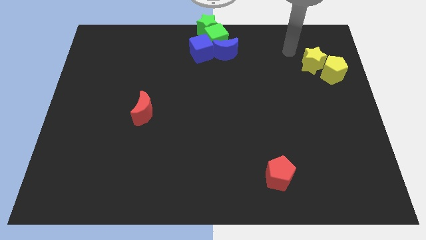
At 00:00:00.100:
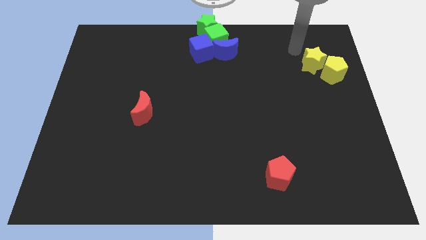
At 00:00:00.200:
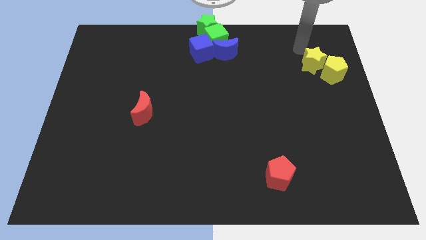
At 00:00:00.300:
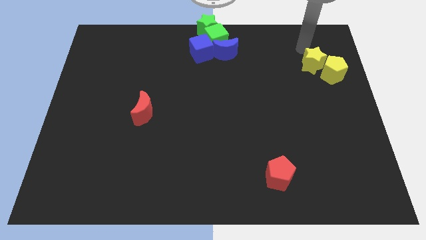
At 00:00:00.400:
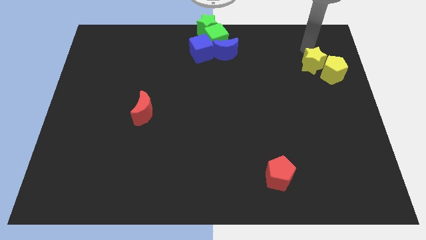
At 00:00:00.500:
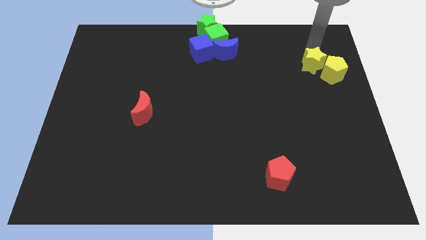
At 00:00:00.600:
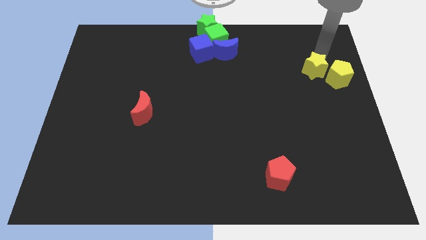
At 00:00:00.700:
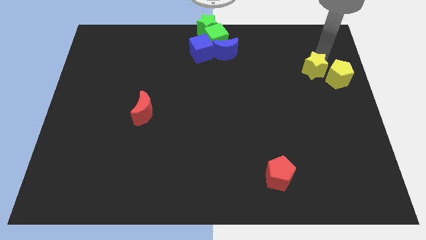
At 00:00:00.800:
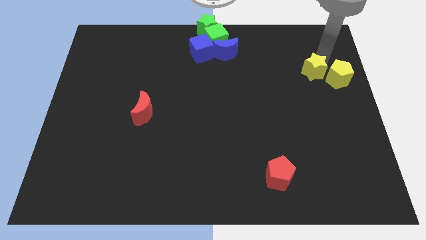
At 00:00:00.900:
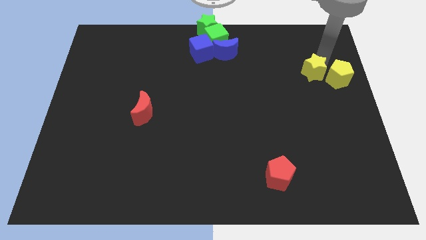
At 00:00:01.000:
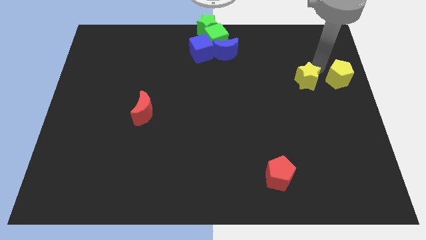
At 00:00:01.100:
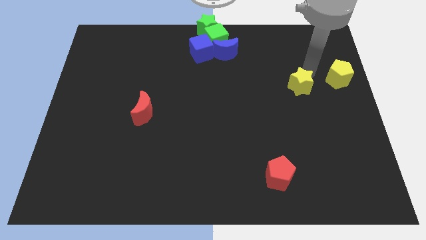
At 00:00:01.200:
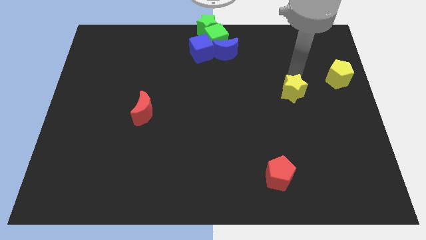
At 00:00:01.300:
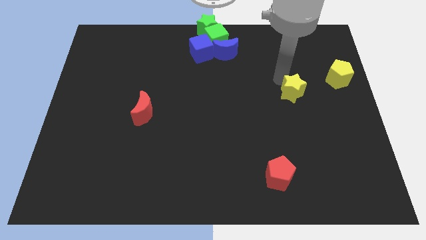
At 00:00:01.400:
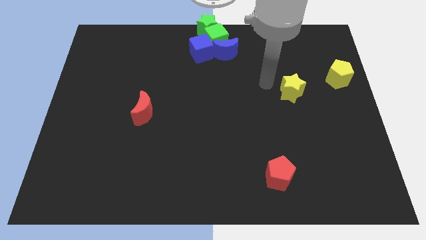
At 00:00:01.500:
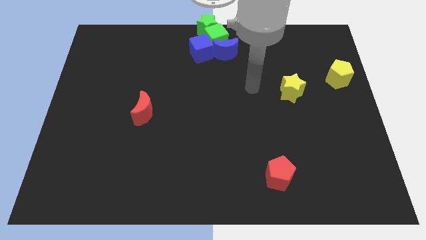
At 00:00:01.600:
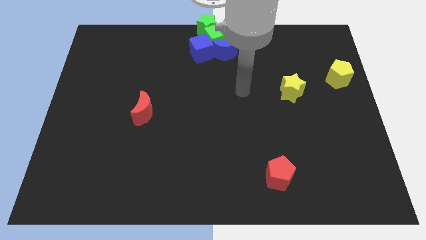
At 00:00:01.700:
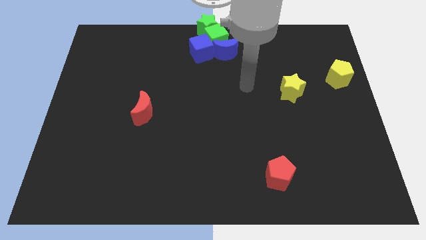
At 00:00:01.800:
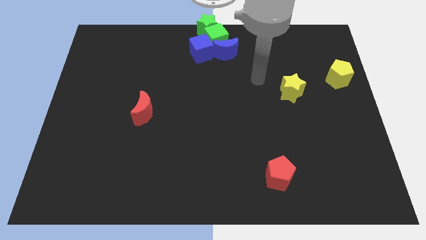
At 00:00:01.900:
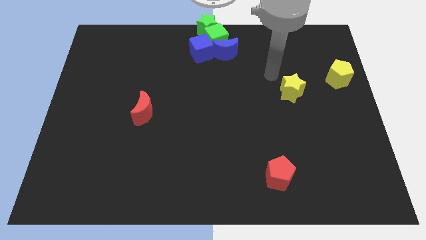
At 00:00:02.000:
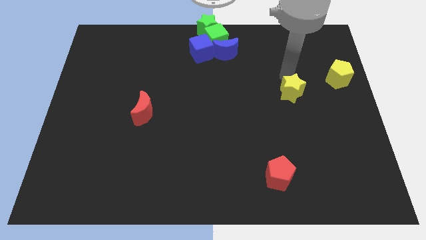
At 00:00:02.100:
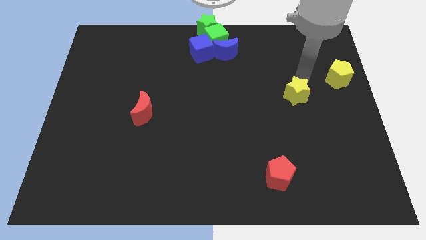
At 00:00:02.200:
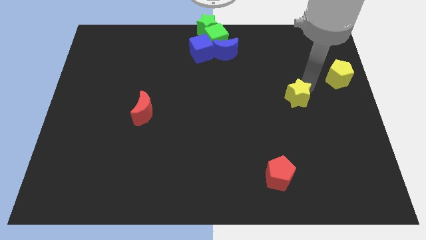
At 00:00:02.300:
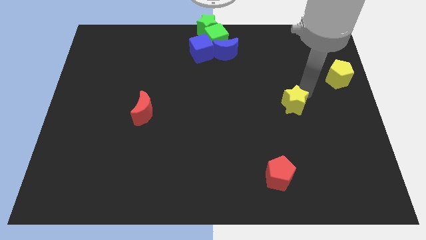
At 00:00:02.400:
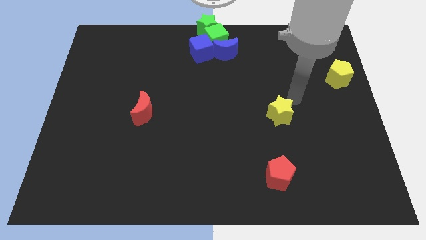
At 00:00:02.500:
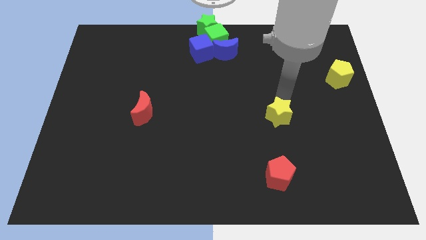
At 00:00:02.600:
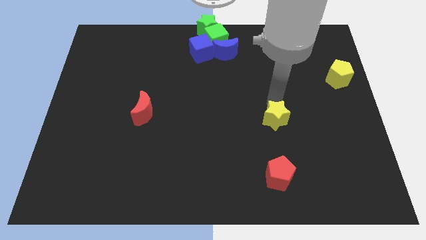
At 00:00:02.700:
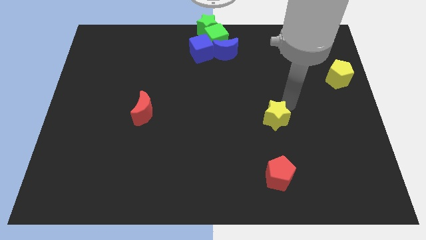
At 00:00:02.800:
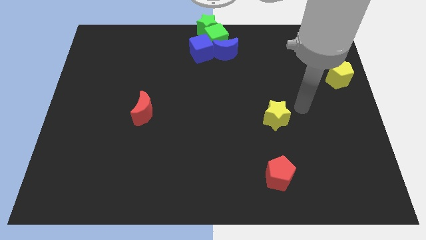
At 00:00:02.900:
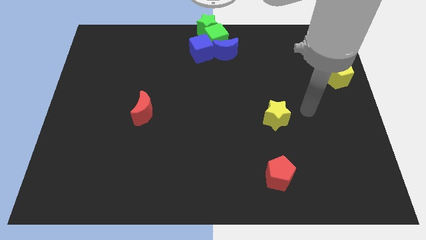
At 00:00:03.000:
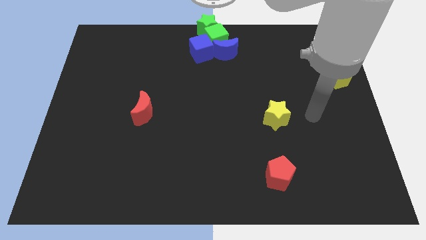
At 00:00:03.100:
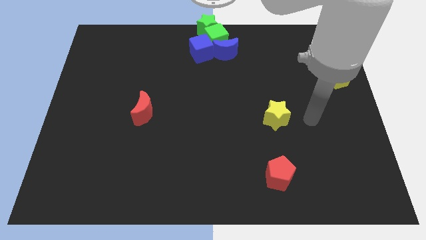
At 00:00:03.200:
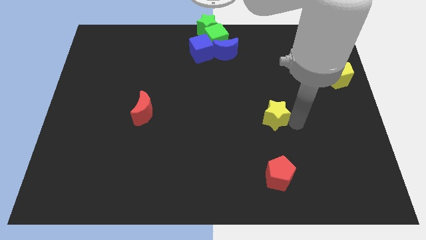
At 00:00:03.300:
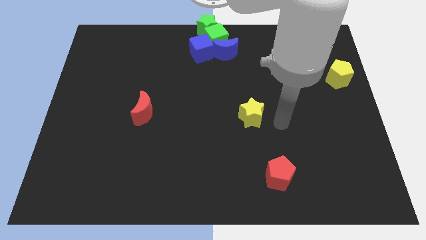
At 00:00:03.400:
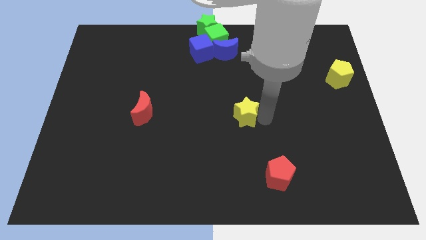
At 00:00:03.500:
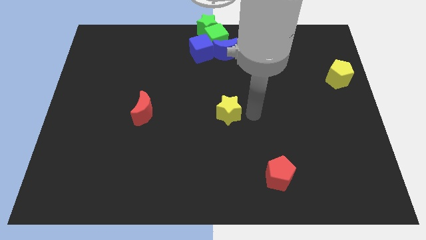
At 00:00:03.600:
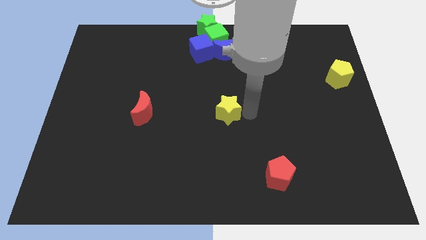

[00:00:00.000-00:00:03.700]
move the yellow star to the center of the board

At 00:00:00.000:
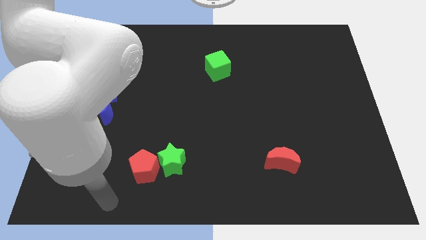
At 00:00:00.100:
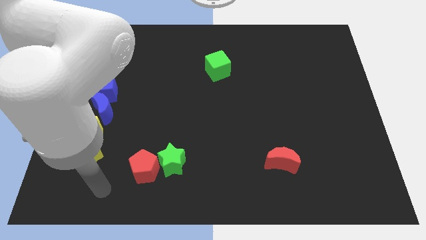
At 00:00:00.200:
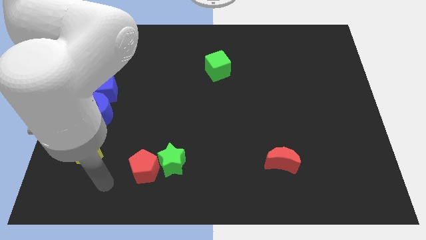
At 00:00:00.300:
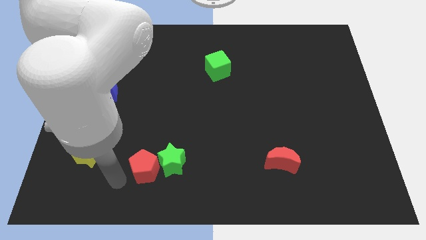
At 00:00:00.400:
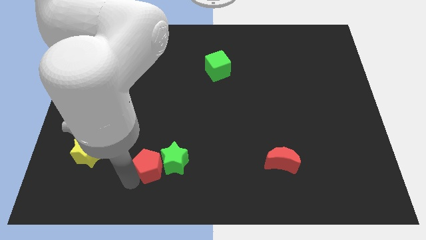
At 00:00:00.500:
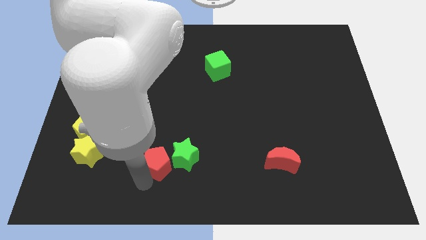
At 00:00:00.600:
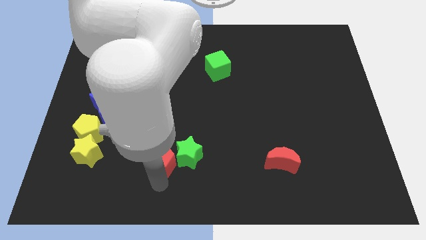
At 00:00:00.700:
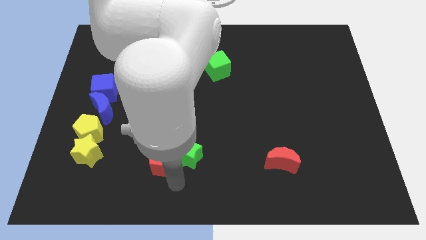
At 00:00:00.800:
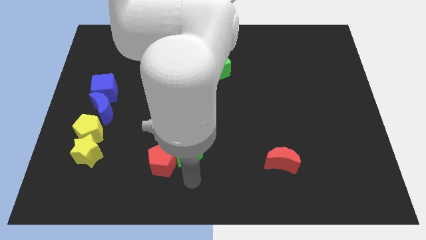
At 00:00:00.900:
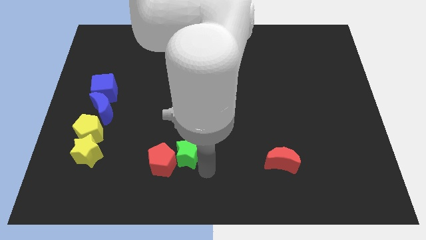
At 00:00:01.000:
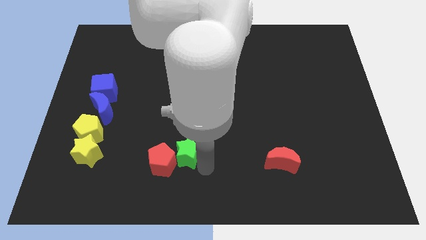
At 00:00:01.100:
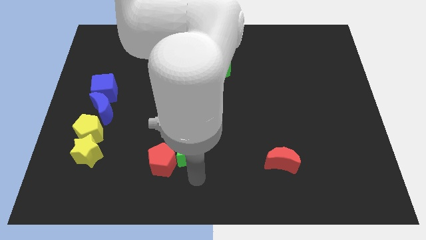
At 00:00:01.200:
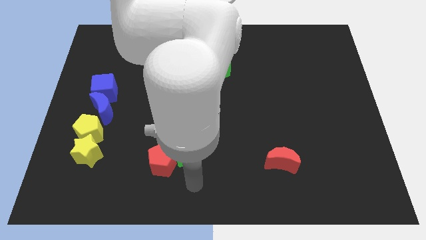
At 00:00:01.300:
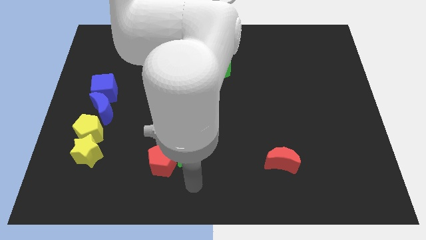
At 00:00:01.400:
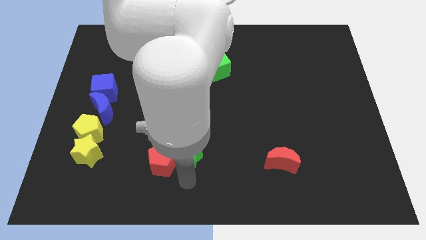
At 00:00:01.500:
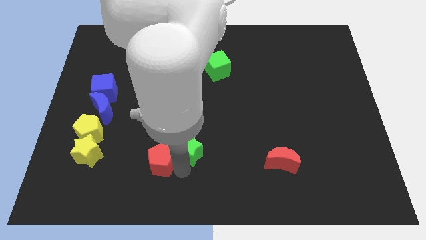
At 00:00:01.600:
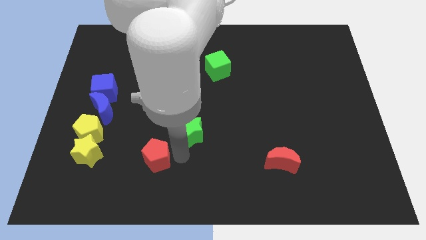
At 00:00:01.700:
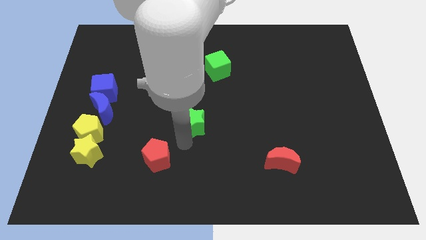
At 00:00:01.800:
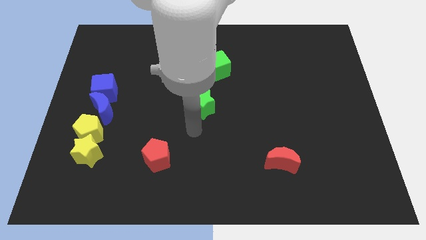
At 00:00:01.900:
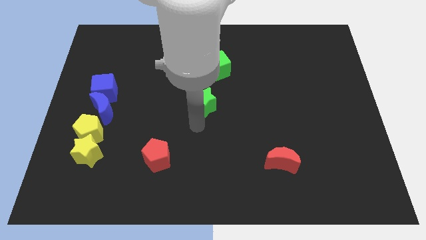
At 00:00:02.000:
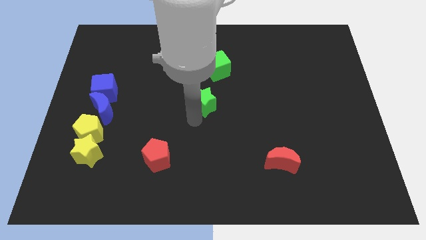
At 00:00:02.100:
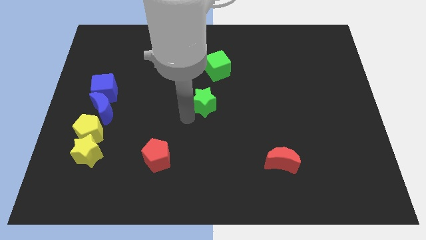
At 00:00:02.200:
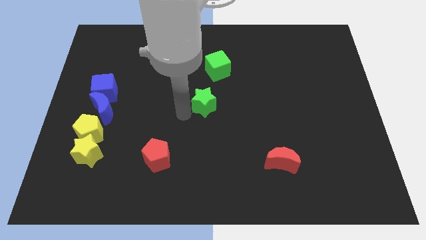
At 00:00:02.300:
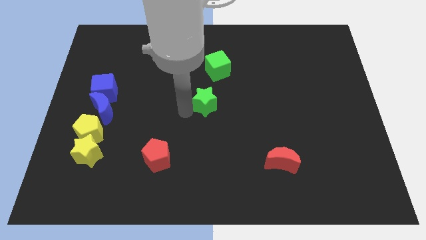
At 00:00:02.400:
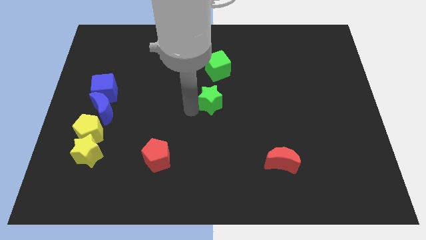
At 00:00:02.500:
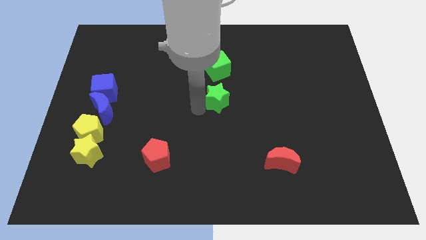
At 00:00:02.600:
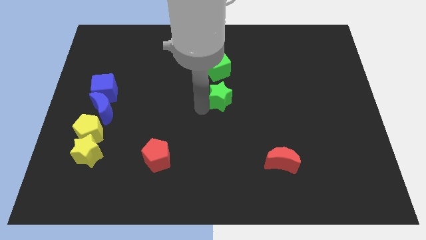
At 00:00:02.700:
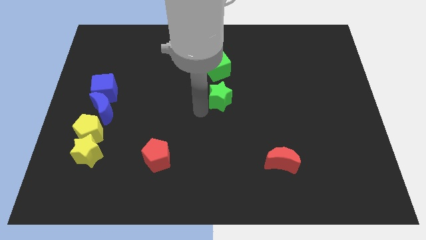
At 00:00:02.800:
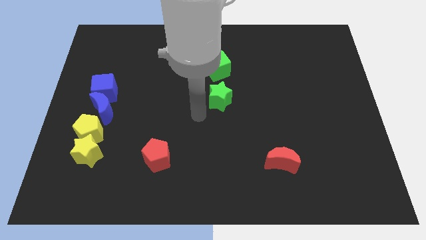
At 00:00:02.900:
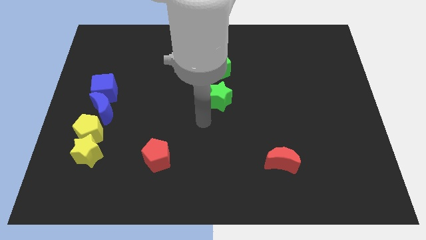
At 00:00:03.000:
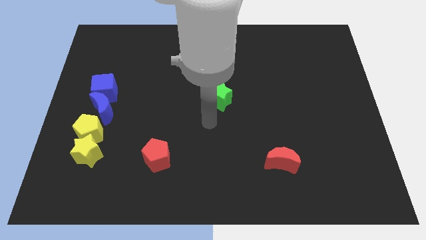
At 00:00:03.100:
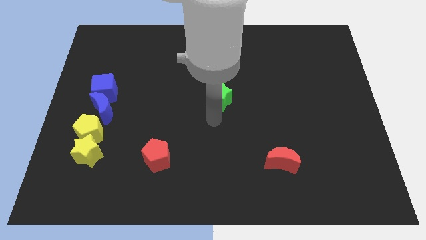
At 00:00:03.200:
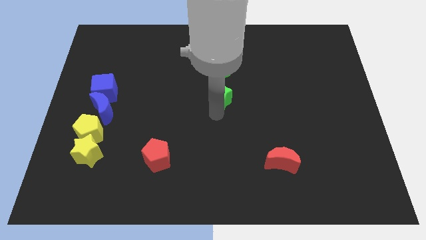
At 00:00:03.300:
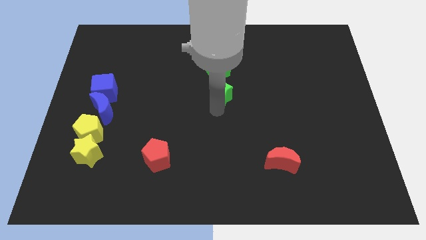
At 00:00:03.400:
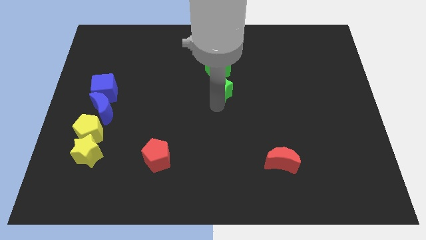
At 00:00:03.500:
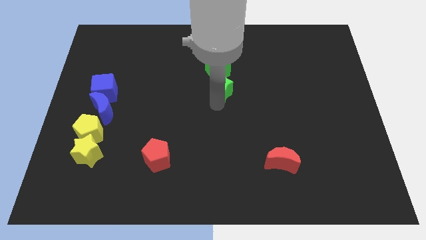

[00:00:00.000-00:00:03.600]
push the green star close to green cube

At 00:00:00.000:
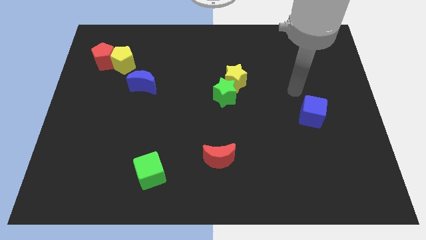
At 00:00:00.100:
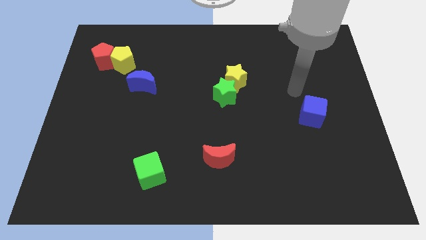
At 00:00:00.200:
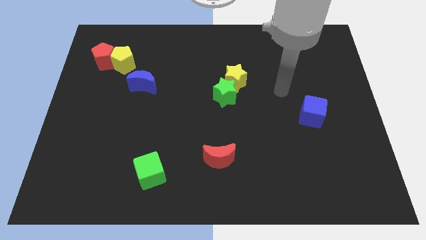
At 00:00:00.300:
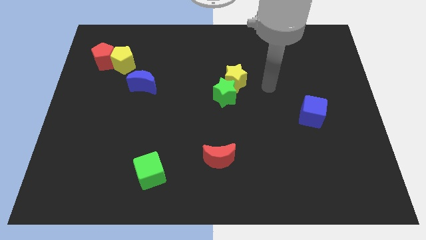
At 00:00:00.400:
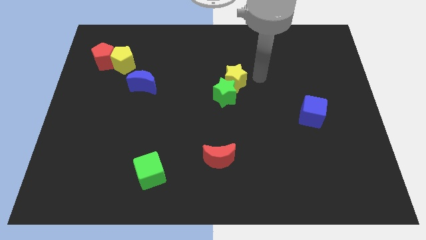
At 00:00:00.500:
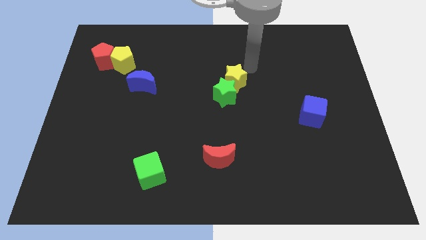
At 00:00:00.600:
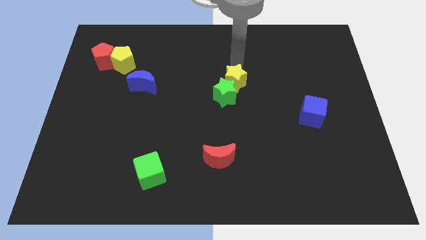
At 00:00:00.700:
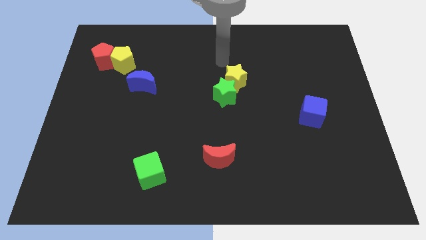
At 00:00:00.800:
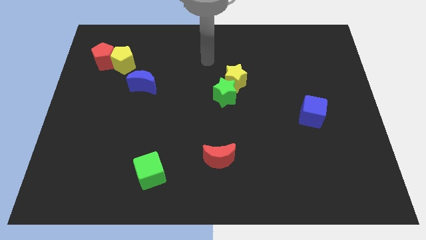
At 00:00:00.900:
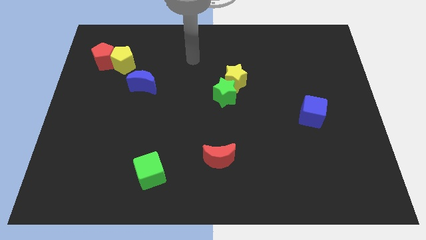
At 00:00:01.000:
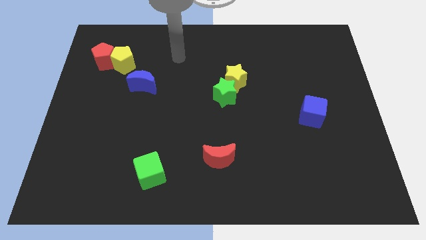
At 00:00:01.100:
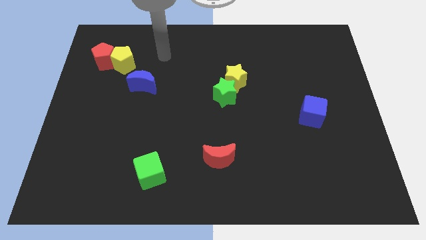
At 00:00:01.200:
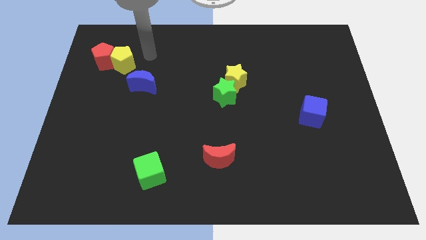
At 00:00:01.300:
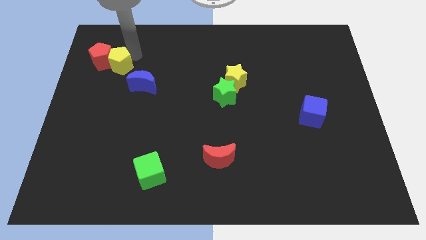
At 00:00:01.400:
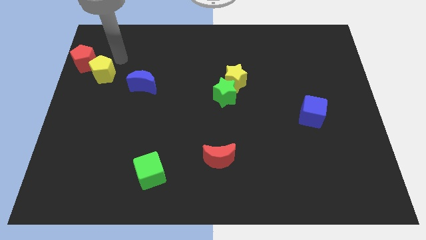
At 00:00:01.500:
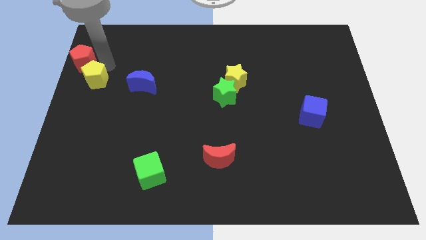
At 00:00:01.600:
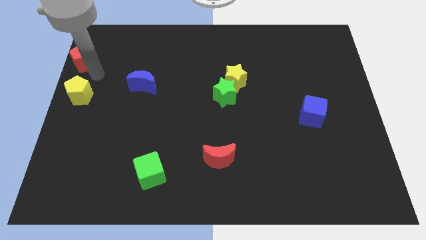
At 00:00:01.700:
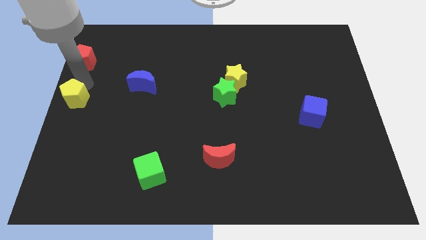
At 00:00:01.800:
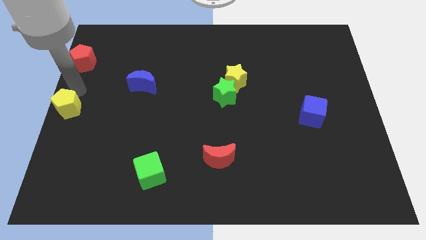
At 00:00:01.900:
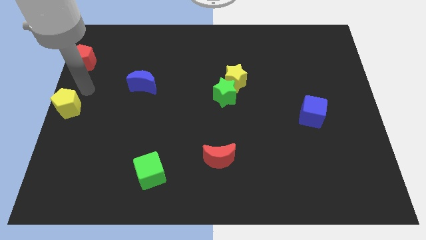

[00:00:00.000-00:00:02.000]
place yellow pentagon to the center left
